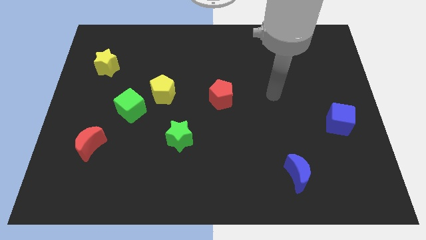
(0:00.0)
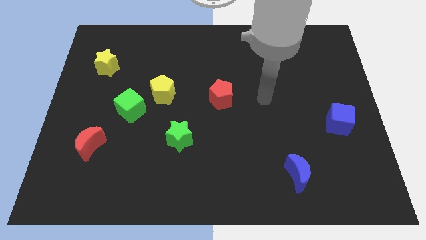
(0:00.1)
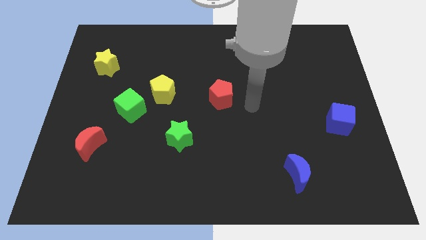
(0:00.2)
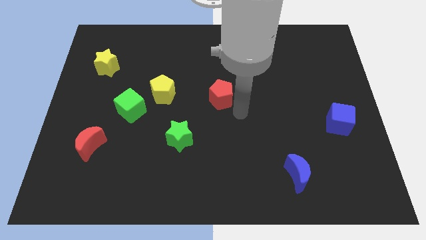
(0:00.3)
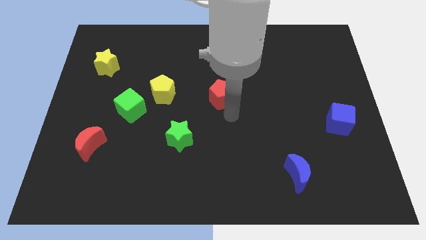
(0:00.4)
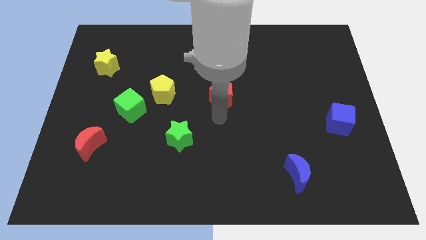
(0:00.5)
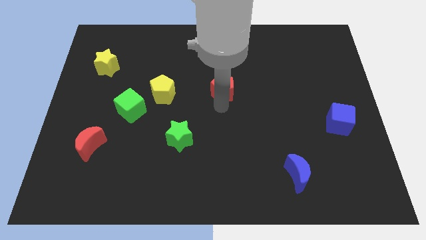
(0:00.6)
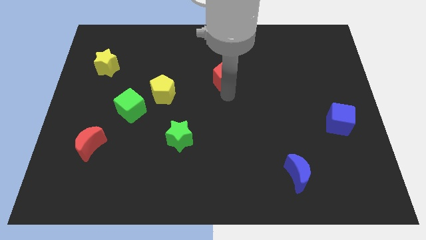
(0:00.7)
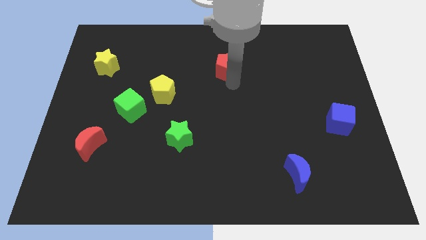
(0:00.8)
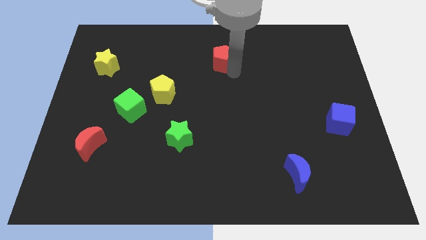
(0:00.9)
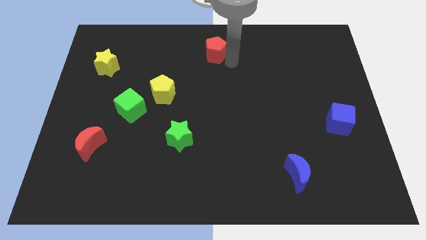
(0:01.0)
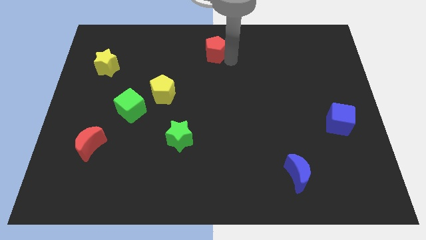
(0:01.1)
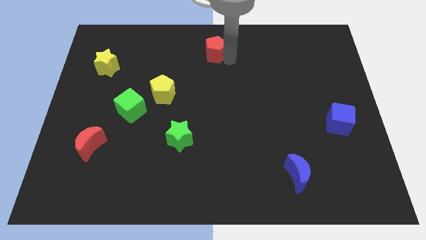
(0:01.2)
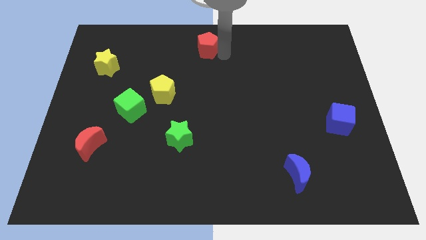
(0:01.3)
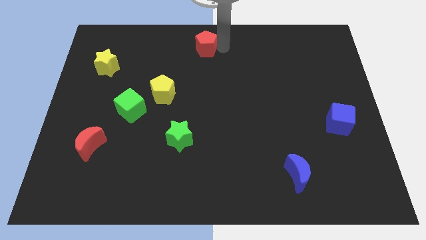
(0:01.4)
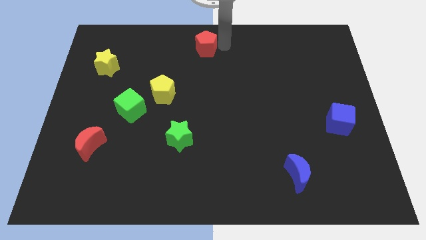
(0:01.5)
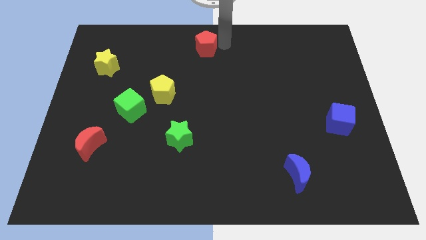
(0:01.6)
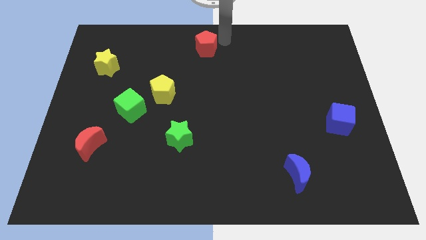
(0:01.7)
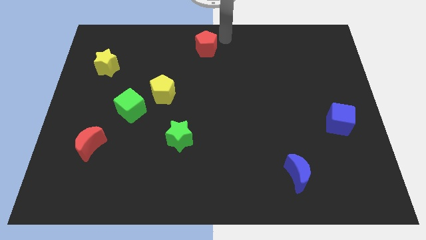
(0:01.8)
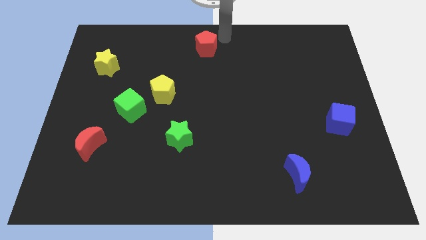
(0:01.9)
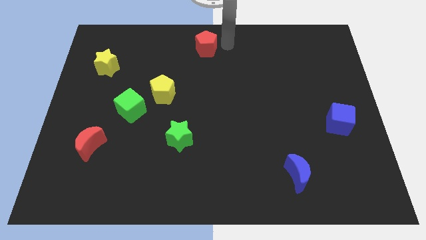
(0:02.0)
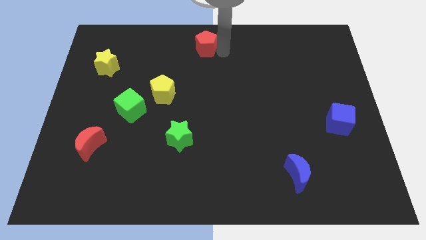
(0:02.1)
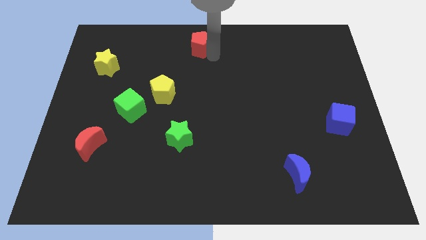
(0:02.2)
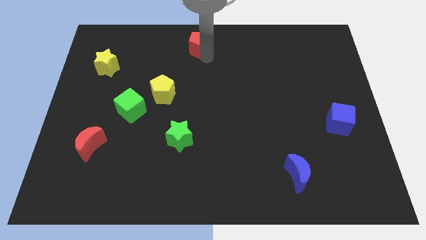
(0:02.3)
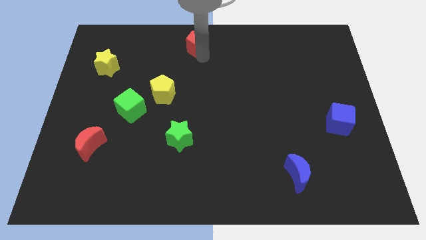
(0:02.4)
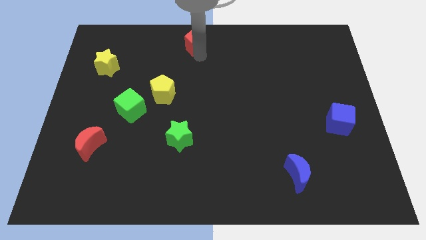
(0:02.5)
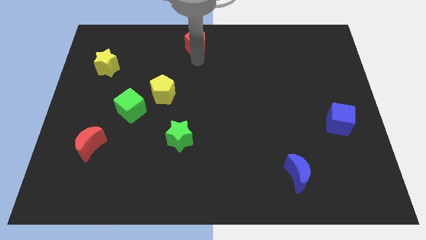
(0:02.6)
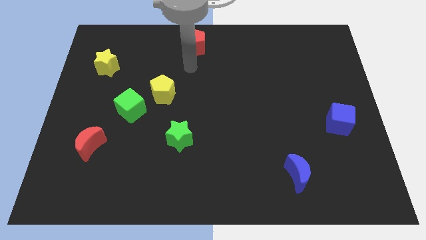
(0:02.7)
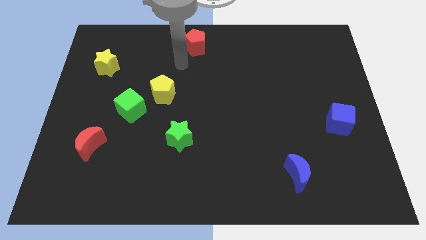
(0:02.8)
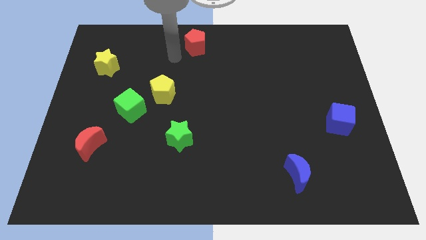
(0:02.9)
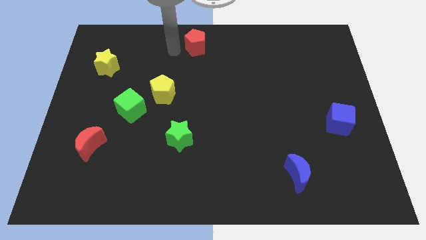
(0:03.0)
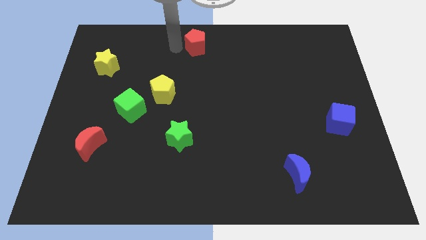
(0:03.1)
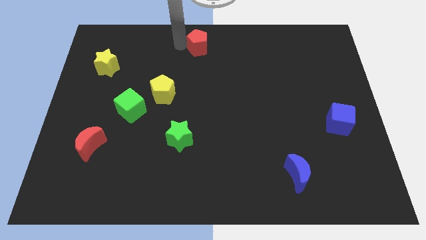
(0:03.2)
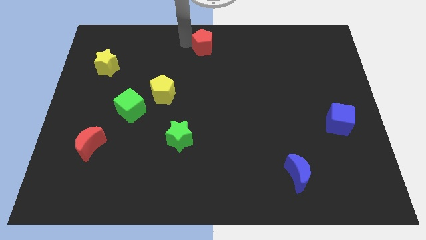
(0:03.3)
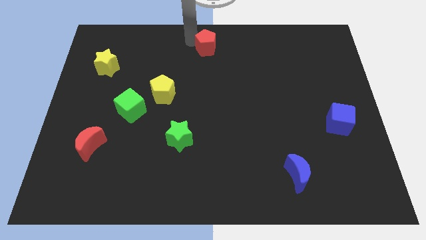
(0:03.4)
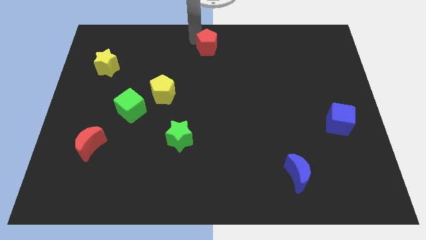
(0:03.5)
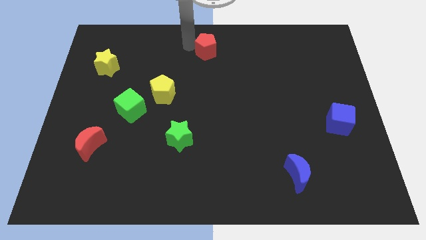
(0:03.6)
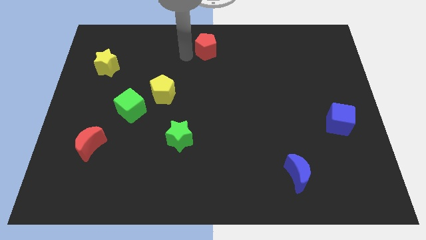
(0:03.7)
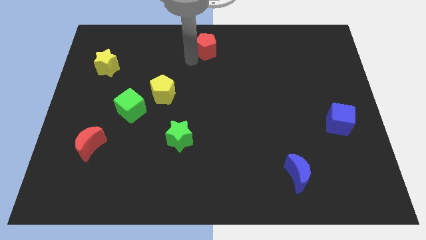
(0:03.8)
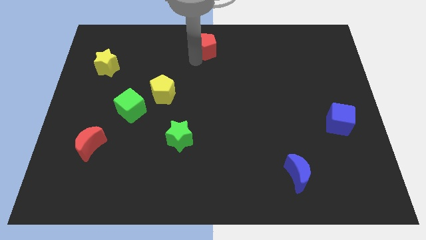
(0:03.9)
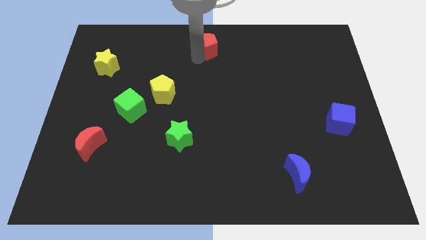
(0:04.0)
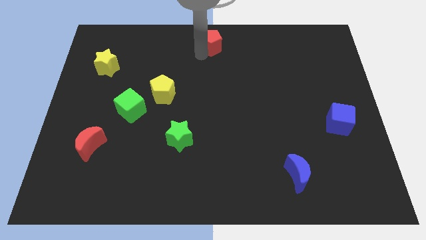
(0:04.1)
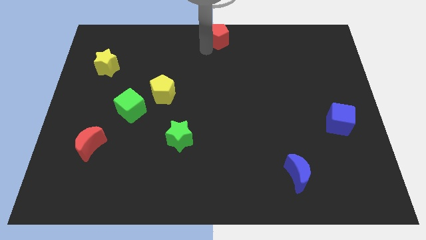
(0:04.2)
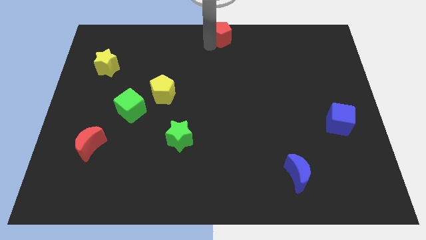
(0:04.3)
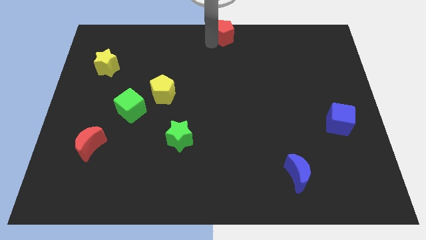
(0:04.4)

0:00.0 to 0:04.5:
push the red pentagon to the top center of the board

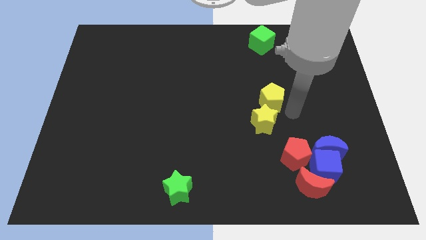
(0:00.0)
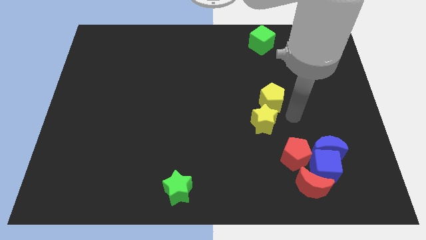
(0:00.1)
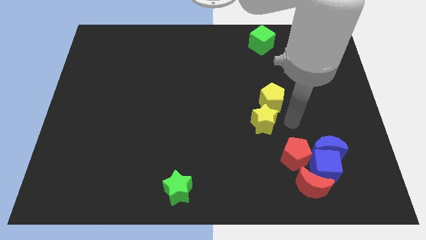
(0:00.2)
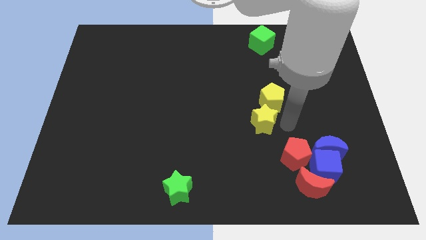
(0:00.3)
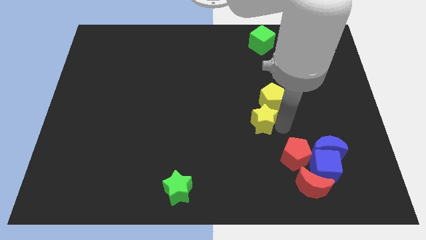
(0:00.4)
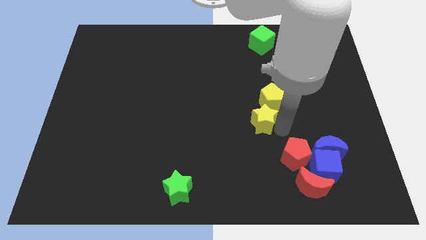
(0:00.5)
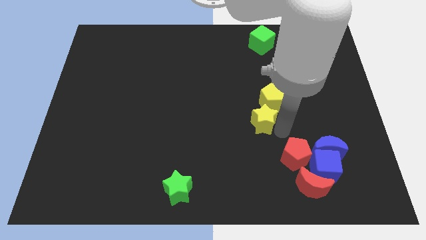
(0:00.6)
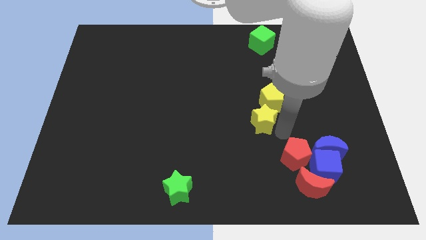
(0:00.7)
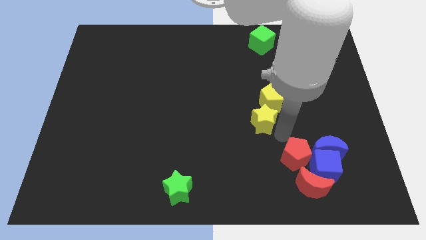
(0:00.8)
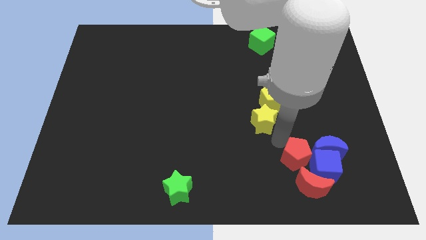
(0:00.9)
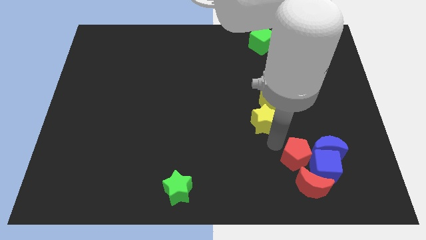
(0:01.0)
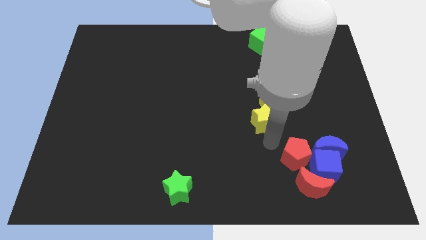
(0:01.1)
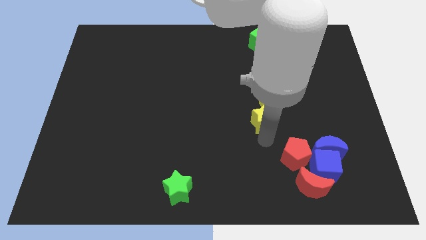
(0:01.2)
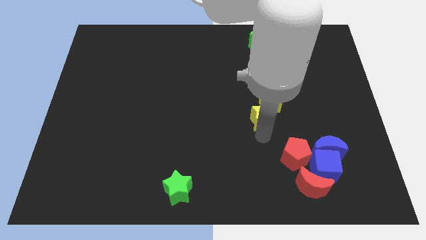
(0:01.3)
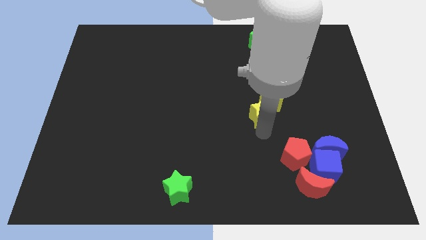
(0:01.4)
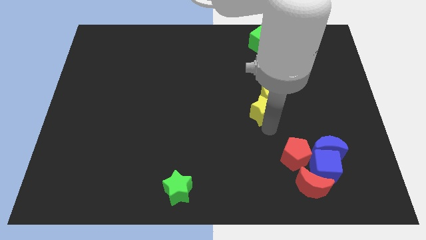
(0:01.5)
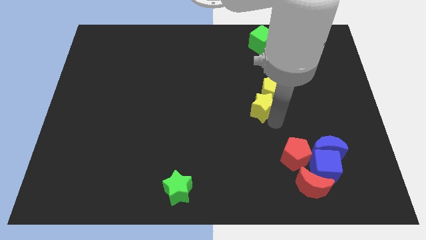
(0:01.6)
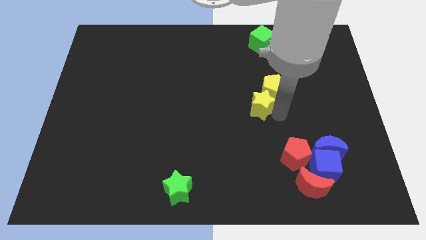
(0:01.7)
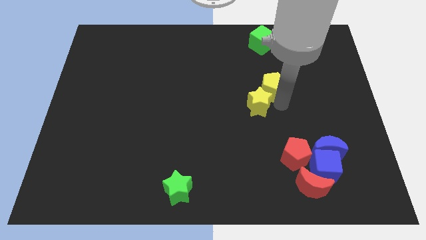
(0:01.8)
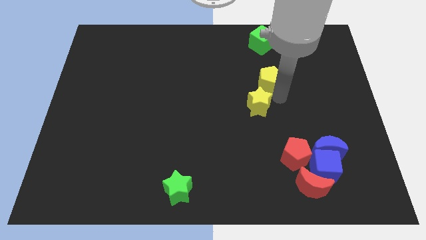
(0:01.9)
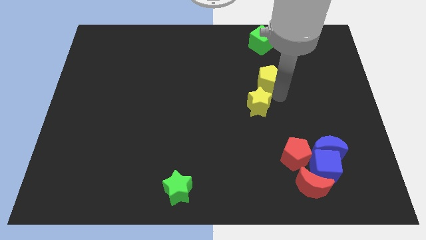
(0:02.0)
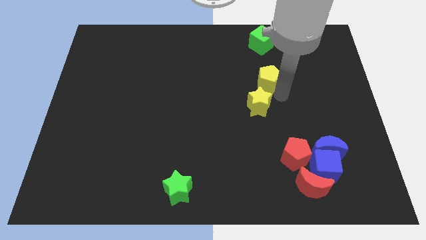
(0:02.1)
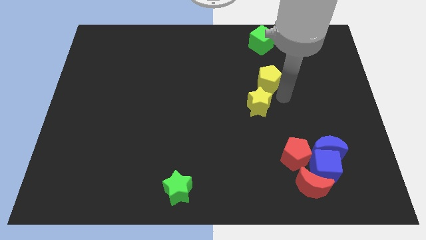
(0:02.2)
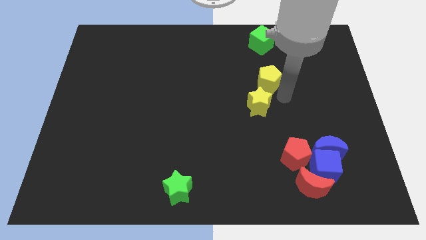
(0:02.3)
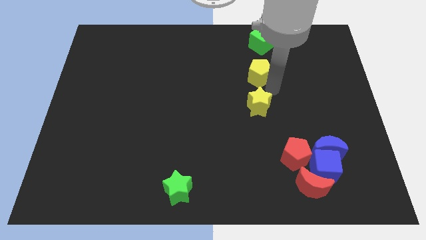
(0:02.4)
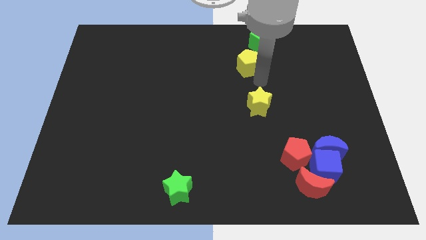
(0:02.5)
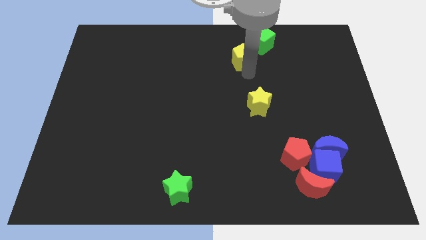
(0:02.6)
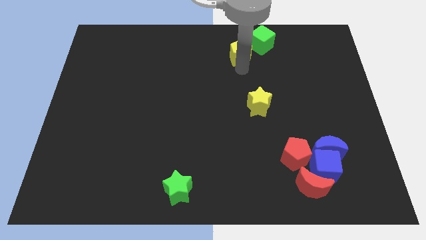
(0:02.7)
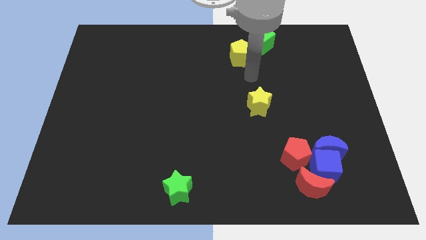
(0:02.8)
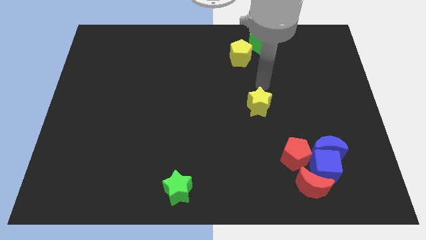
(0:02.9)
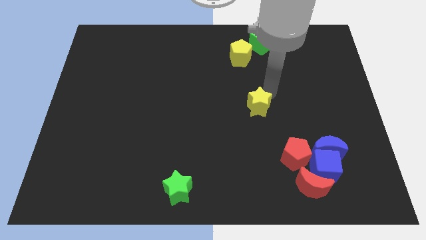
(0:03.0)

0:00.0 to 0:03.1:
slide the yellow pentagon at the bottom left side of the green cube

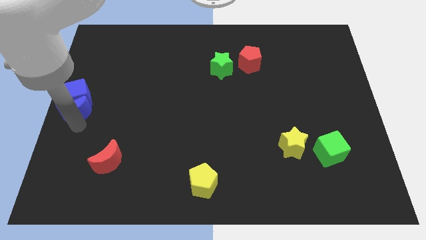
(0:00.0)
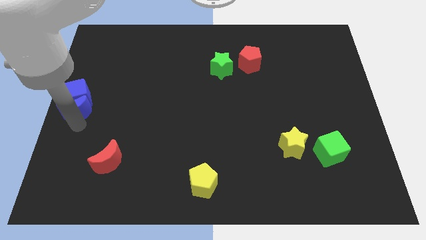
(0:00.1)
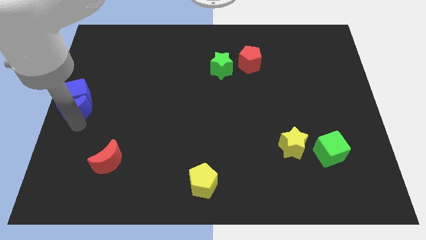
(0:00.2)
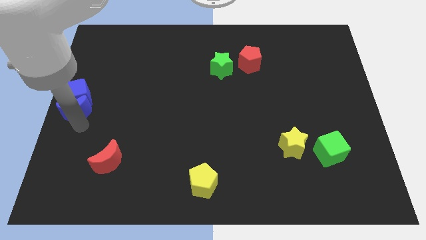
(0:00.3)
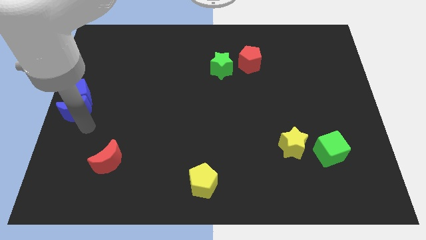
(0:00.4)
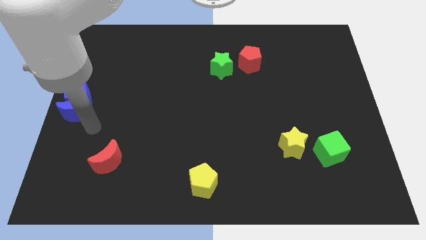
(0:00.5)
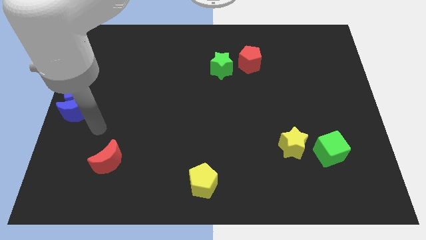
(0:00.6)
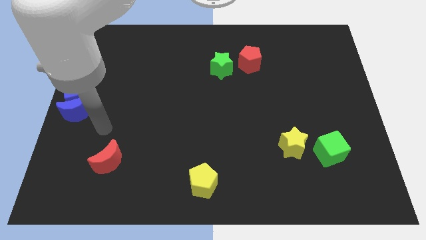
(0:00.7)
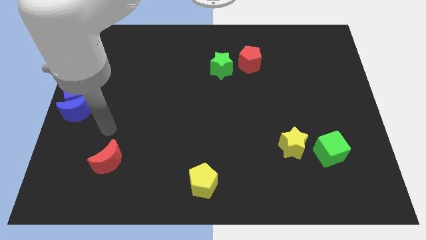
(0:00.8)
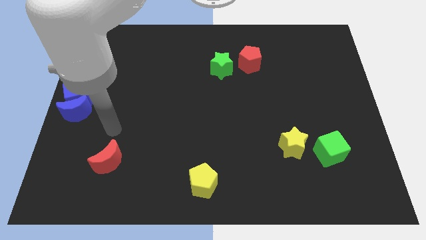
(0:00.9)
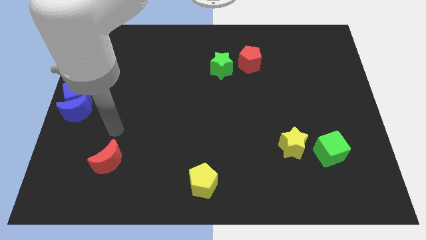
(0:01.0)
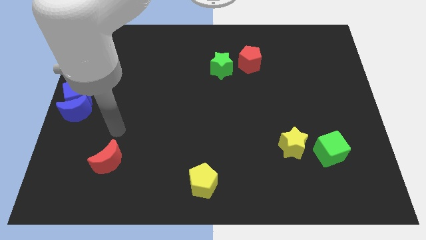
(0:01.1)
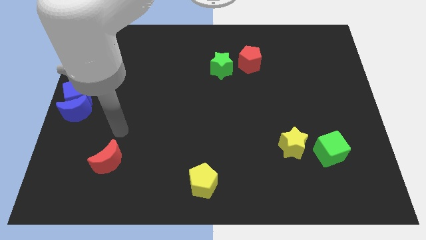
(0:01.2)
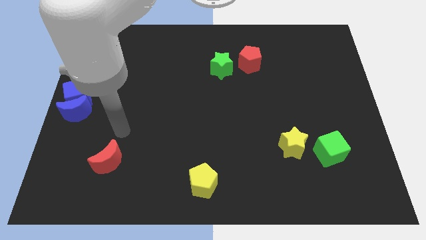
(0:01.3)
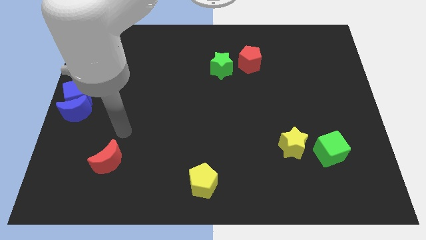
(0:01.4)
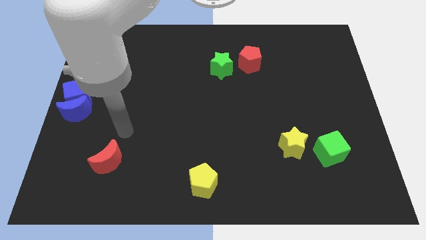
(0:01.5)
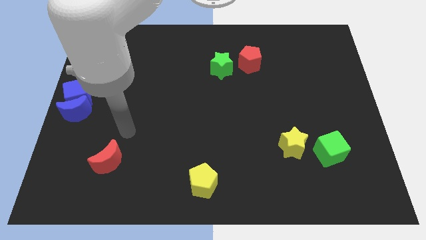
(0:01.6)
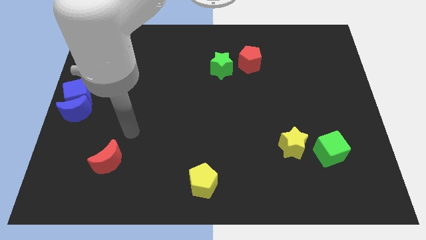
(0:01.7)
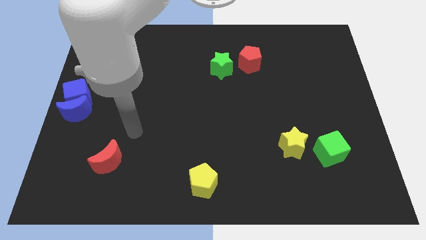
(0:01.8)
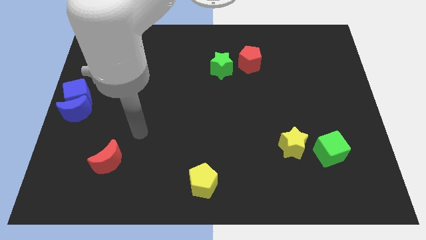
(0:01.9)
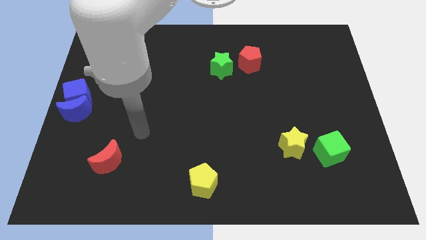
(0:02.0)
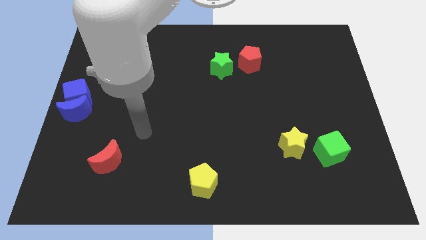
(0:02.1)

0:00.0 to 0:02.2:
move your arm away from the blue moon
